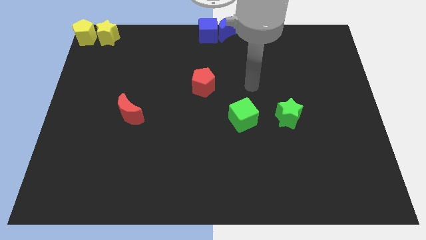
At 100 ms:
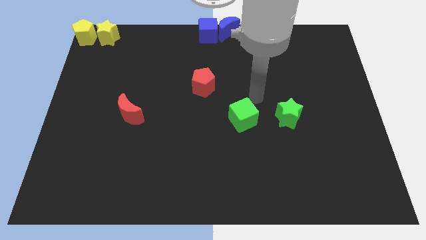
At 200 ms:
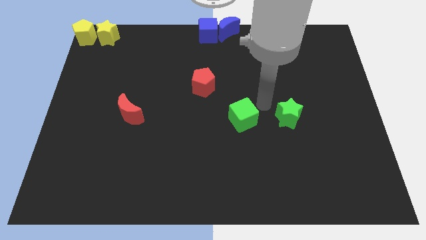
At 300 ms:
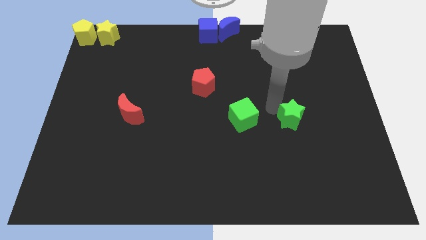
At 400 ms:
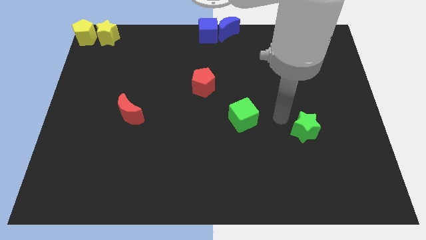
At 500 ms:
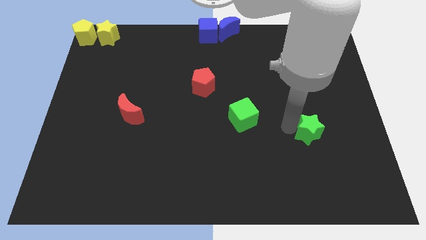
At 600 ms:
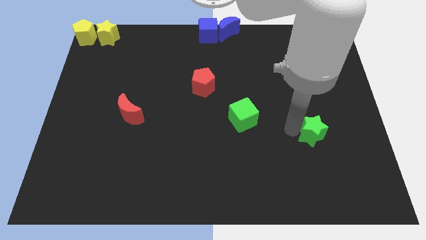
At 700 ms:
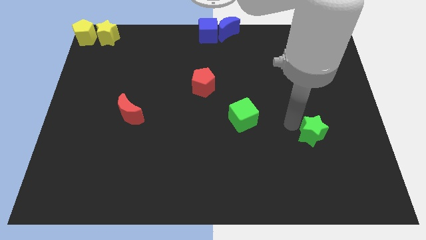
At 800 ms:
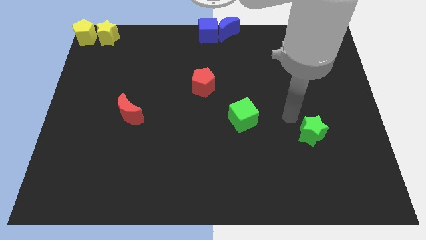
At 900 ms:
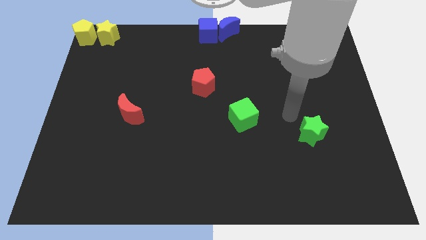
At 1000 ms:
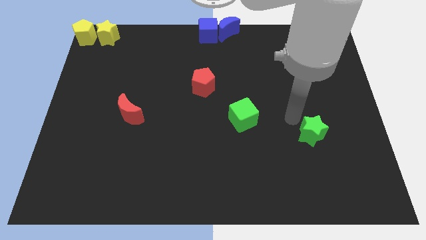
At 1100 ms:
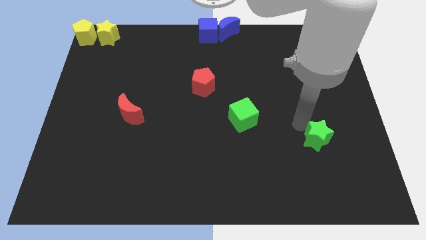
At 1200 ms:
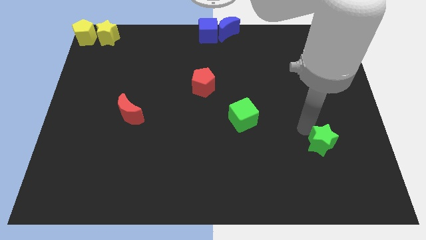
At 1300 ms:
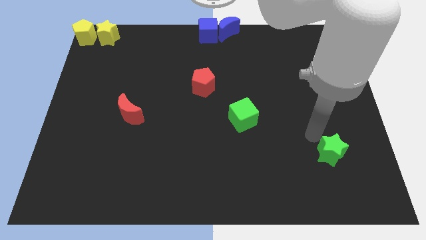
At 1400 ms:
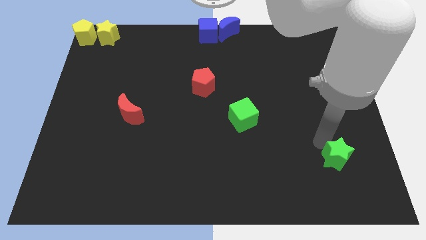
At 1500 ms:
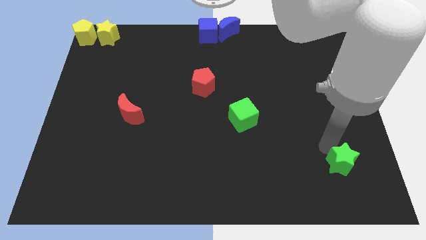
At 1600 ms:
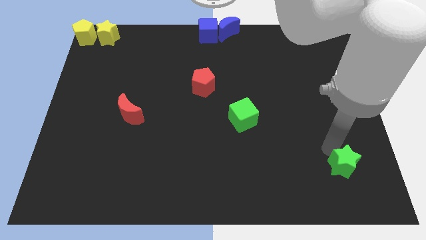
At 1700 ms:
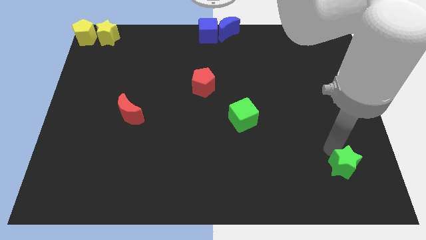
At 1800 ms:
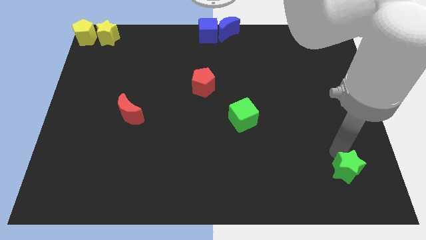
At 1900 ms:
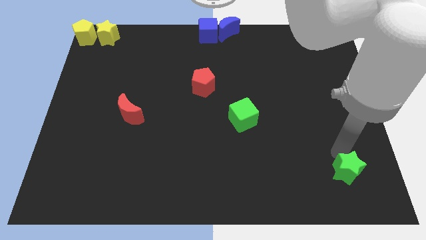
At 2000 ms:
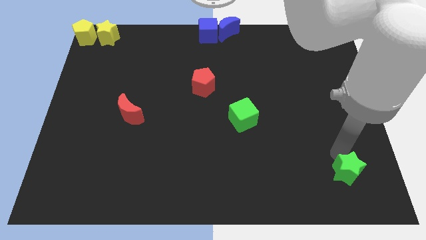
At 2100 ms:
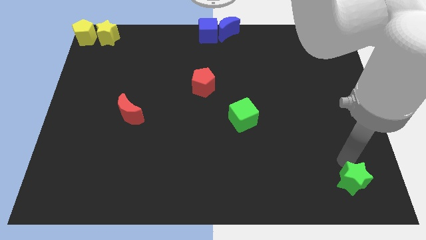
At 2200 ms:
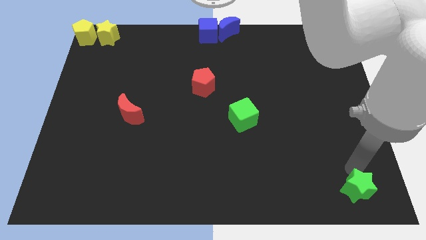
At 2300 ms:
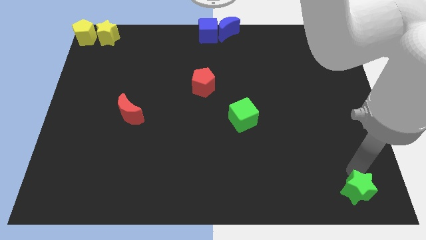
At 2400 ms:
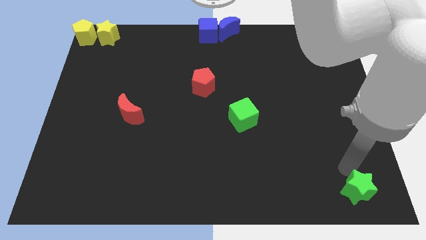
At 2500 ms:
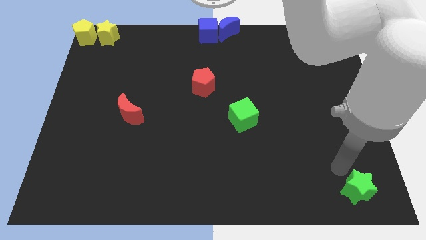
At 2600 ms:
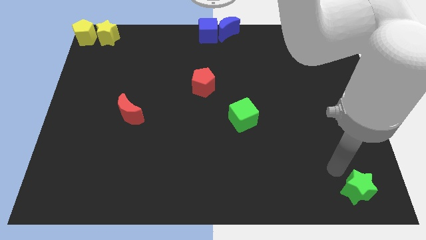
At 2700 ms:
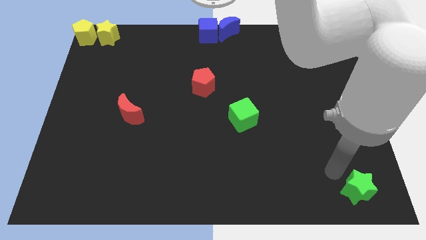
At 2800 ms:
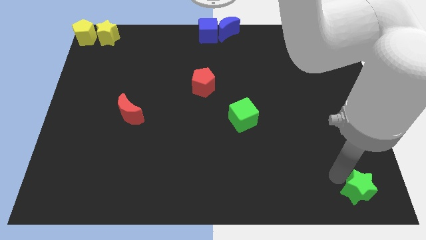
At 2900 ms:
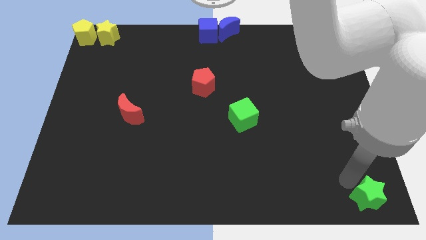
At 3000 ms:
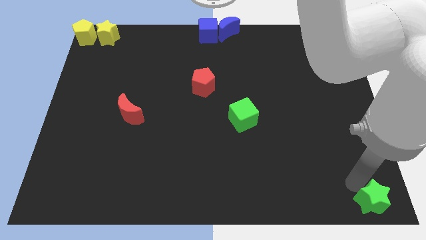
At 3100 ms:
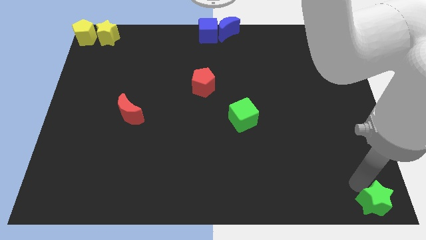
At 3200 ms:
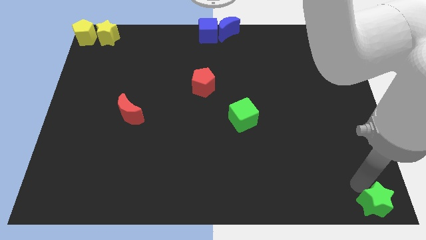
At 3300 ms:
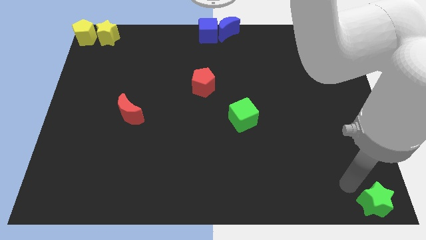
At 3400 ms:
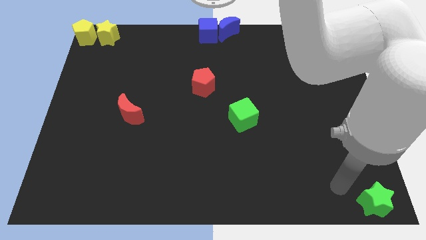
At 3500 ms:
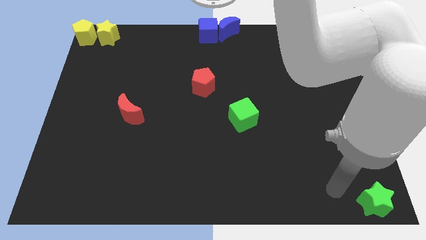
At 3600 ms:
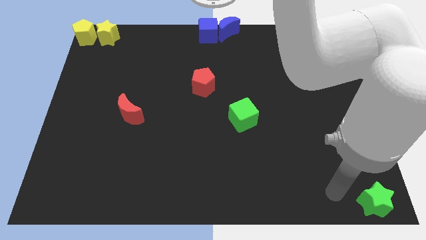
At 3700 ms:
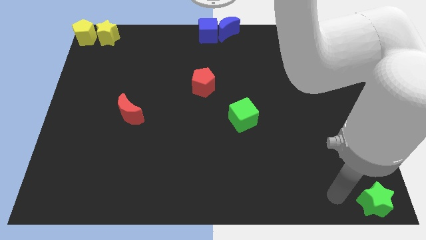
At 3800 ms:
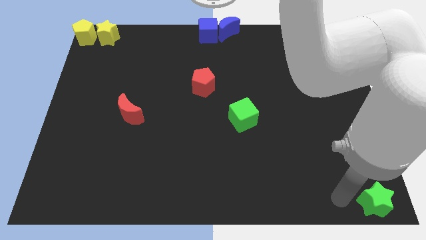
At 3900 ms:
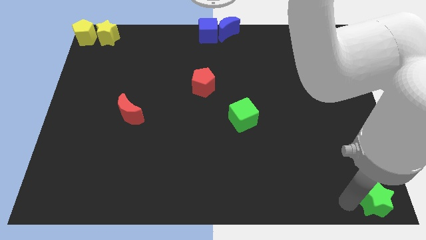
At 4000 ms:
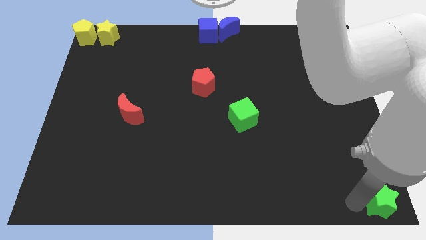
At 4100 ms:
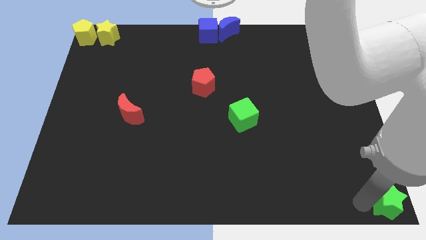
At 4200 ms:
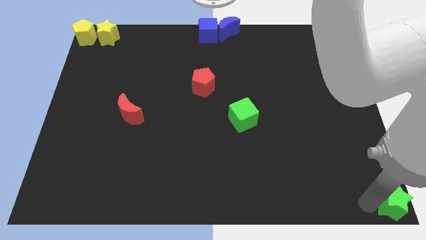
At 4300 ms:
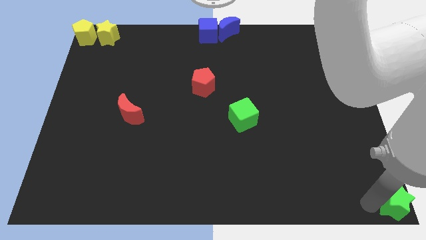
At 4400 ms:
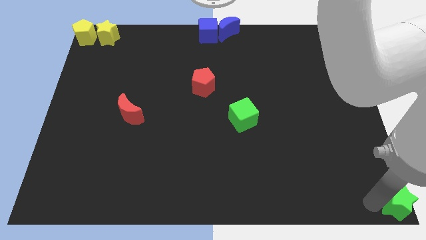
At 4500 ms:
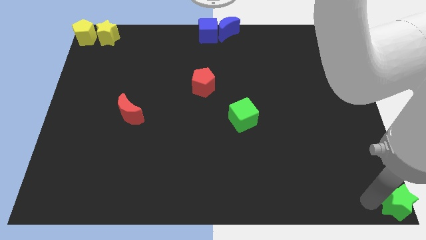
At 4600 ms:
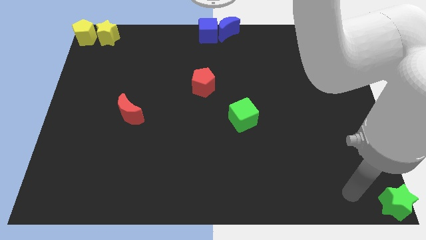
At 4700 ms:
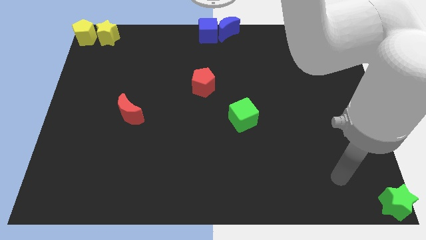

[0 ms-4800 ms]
push the green star to the bottom right corner

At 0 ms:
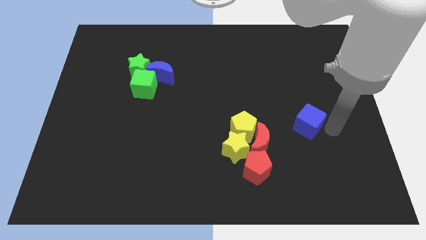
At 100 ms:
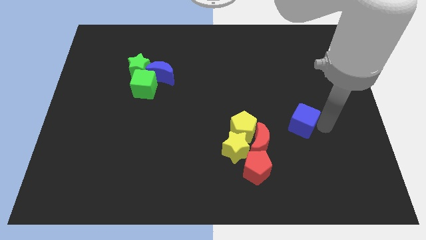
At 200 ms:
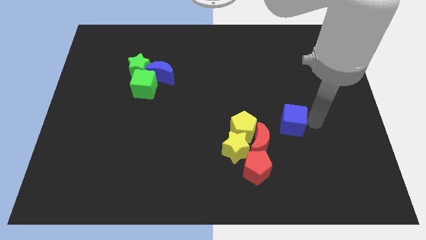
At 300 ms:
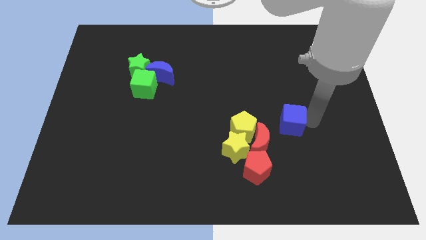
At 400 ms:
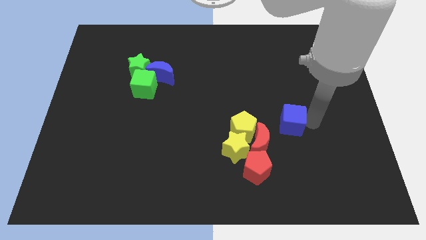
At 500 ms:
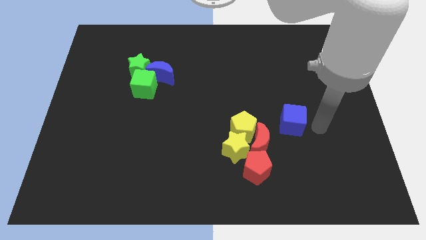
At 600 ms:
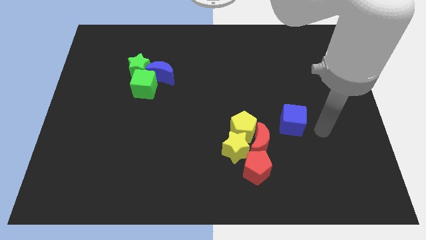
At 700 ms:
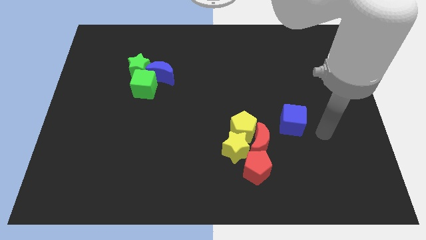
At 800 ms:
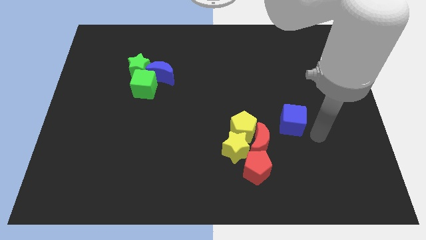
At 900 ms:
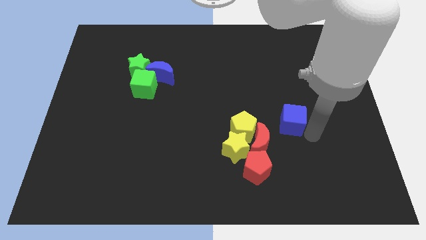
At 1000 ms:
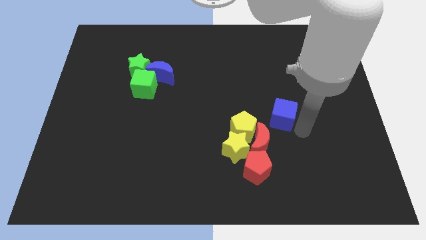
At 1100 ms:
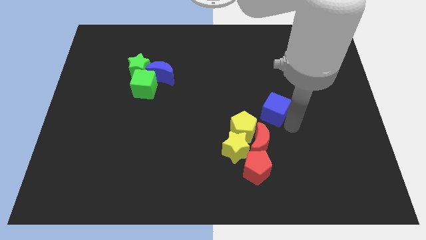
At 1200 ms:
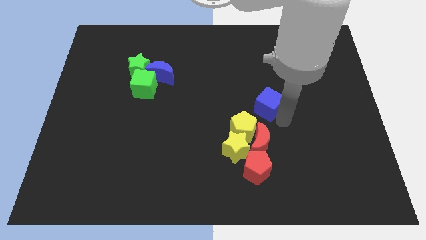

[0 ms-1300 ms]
place blue cube above red moon

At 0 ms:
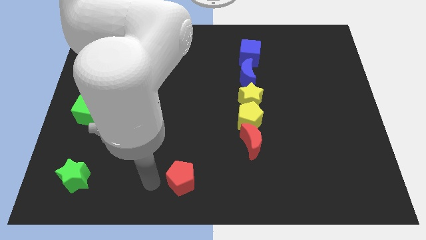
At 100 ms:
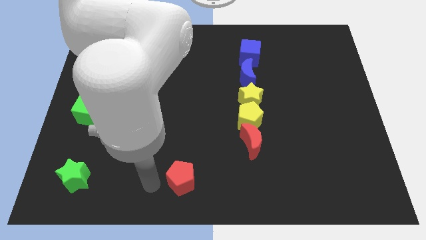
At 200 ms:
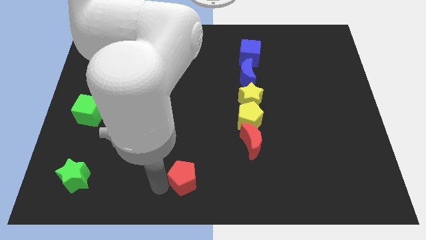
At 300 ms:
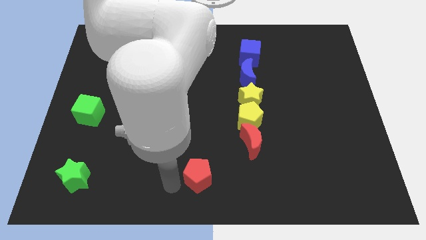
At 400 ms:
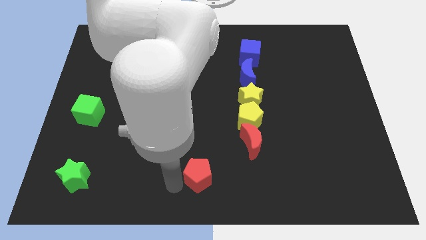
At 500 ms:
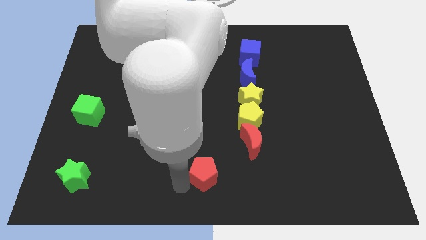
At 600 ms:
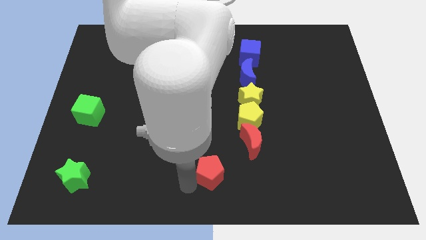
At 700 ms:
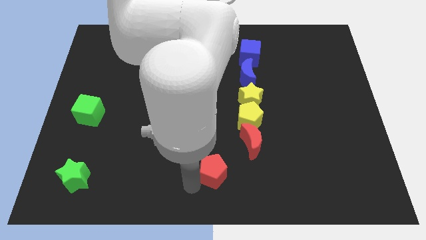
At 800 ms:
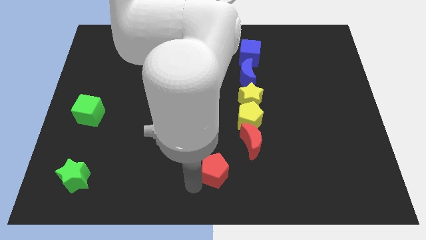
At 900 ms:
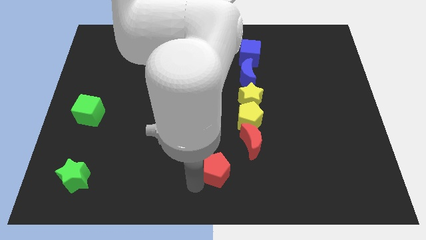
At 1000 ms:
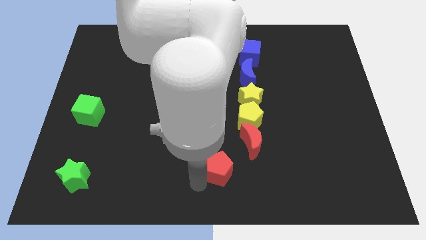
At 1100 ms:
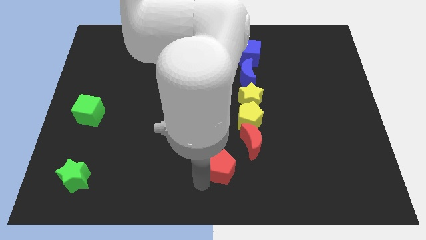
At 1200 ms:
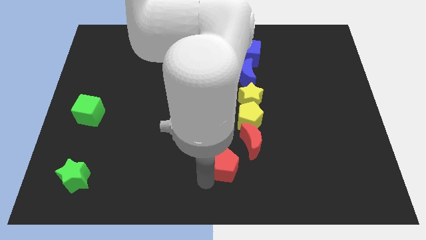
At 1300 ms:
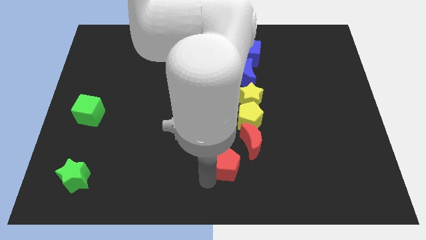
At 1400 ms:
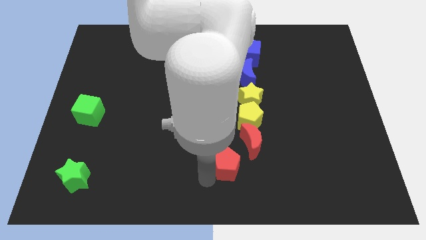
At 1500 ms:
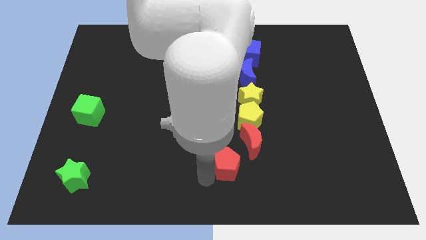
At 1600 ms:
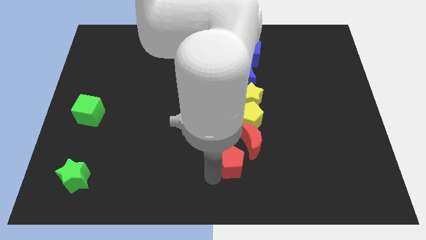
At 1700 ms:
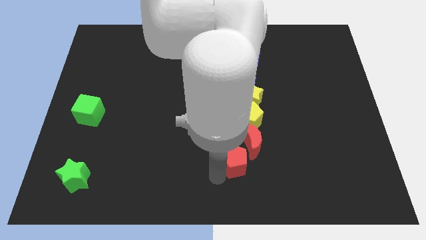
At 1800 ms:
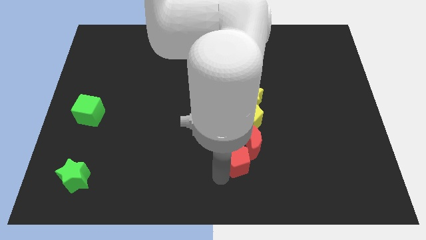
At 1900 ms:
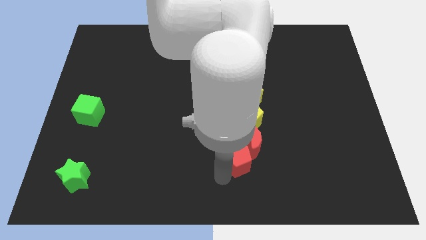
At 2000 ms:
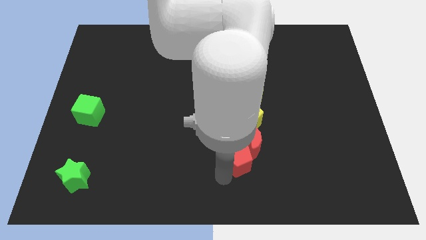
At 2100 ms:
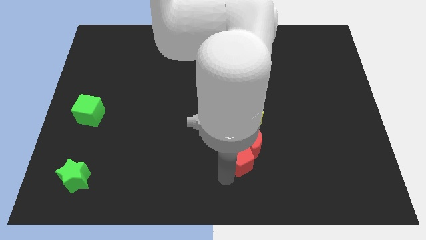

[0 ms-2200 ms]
push the red pentagon into red moon

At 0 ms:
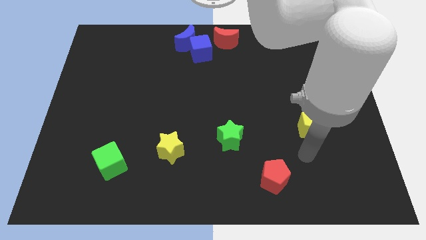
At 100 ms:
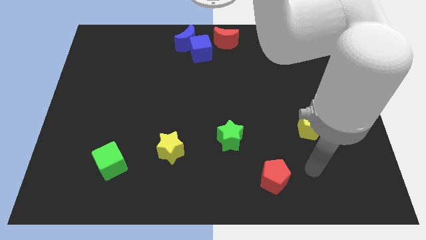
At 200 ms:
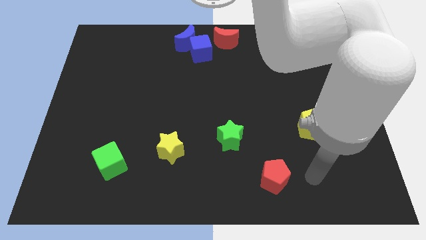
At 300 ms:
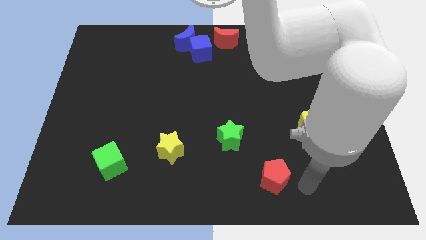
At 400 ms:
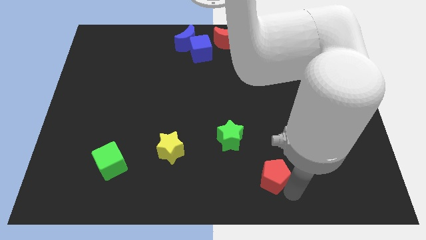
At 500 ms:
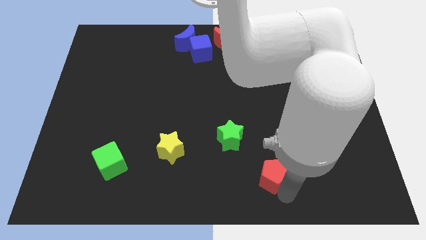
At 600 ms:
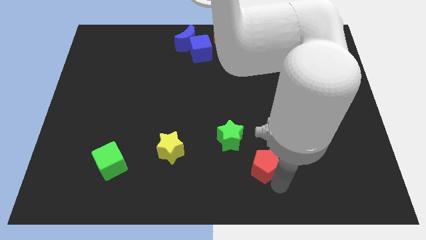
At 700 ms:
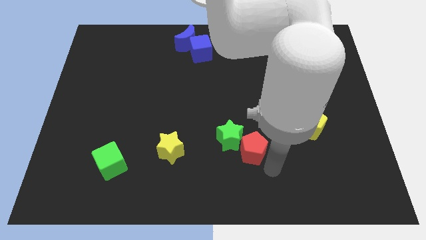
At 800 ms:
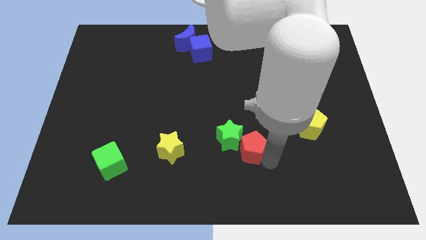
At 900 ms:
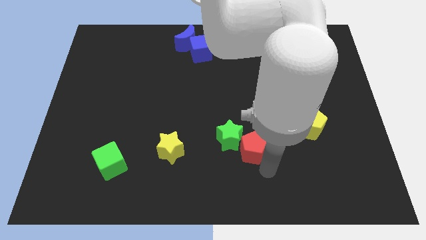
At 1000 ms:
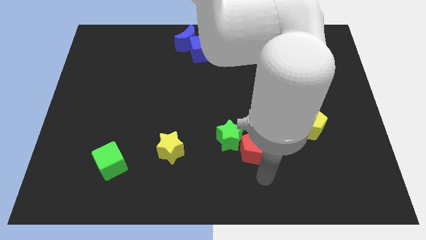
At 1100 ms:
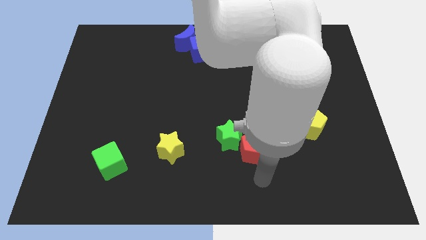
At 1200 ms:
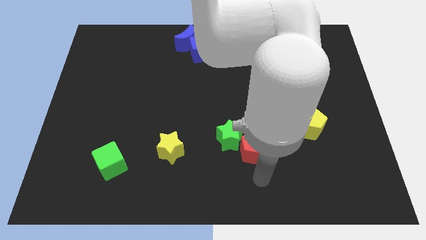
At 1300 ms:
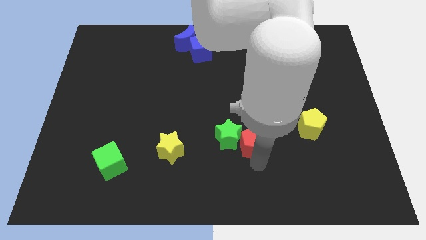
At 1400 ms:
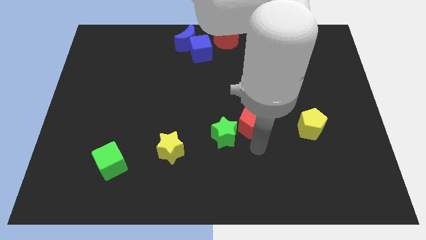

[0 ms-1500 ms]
move the red pentagon to the right of the green star
